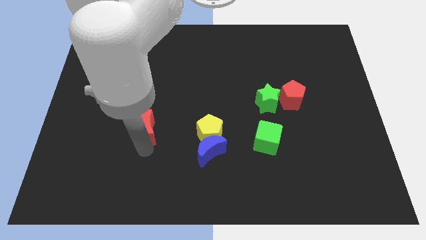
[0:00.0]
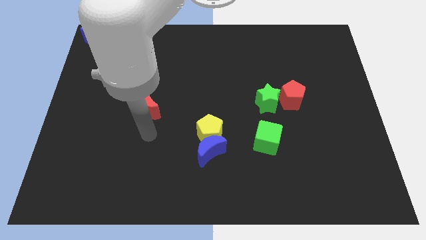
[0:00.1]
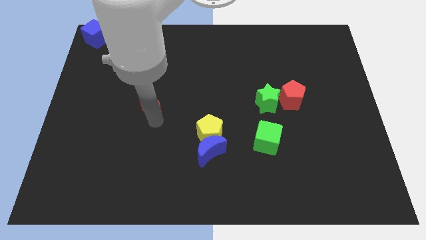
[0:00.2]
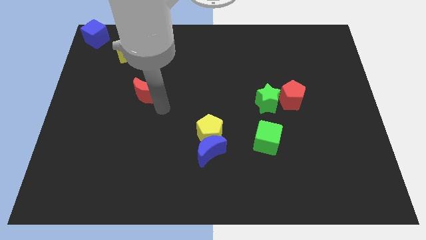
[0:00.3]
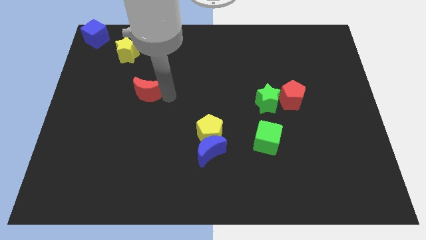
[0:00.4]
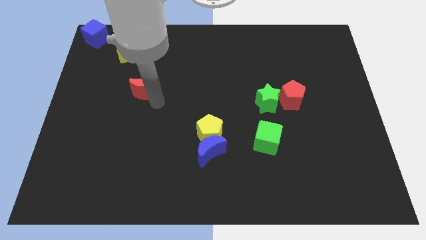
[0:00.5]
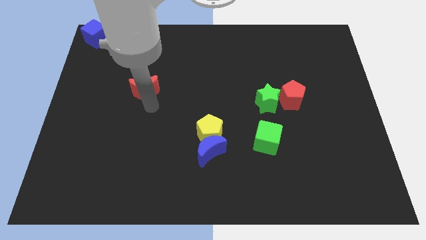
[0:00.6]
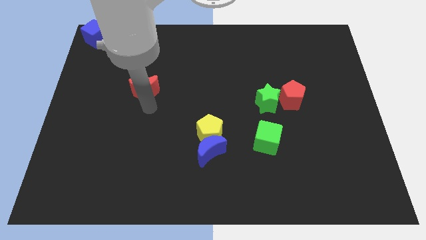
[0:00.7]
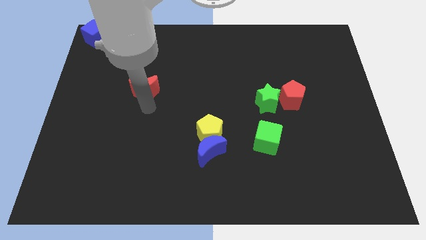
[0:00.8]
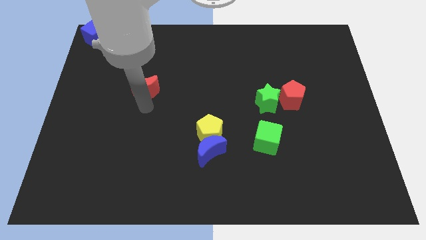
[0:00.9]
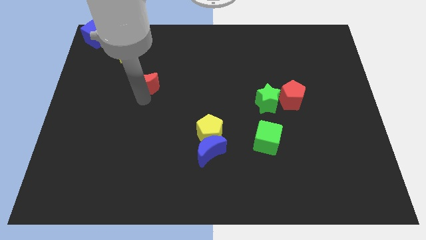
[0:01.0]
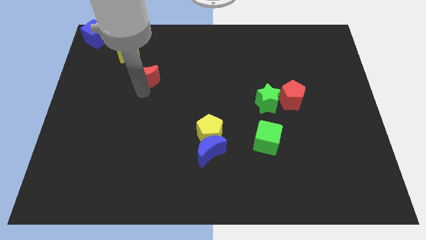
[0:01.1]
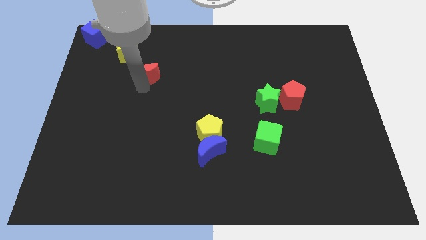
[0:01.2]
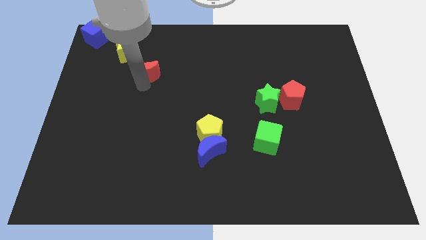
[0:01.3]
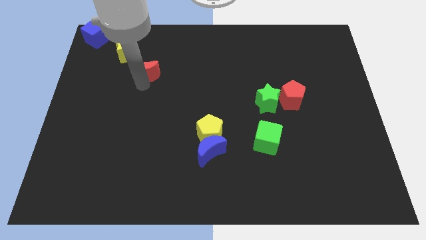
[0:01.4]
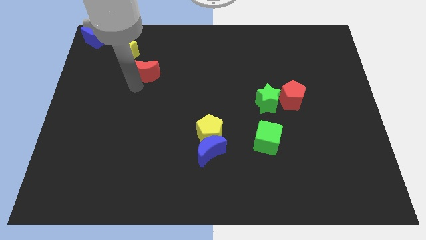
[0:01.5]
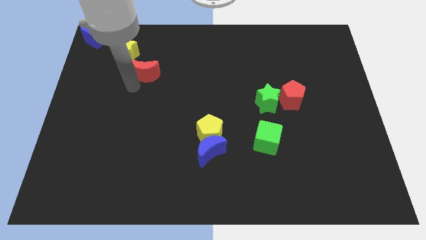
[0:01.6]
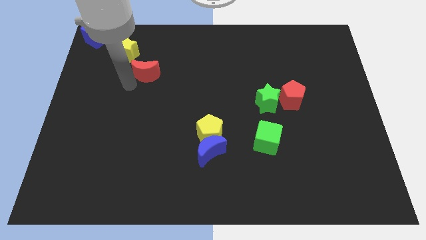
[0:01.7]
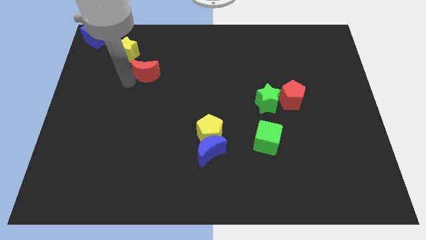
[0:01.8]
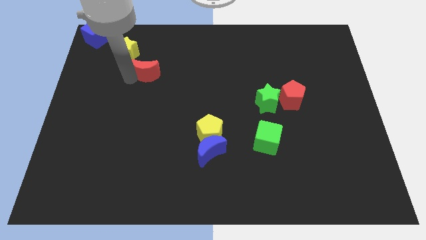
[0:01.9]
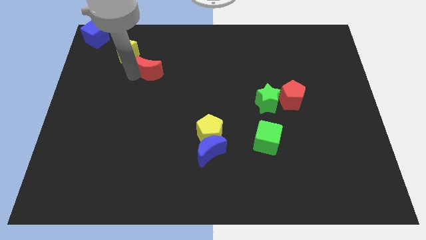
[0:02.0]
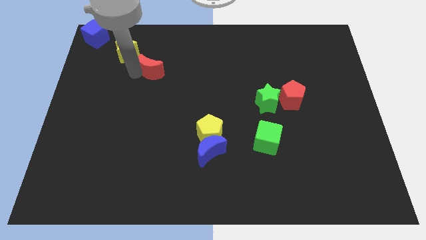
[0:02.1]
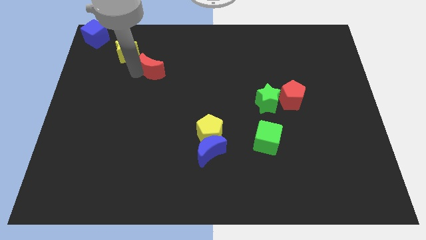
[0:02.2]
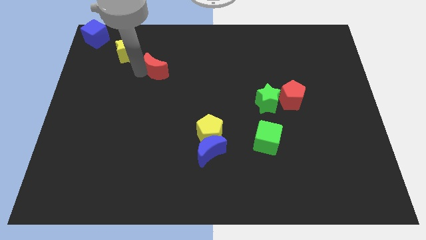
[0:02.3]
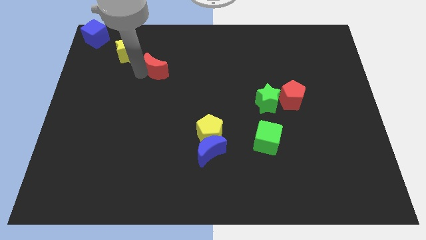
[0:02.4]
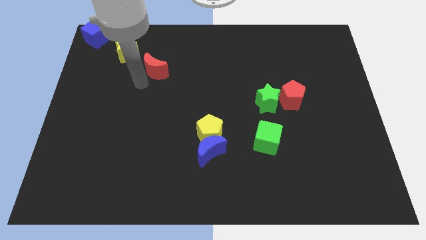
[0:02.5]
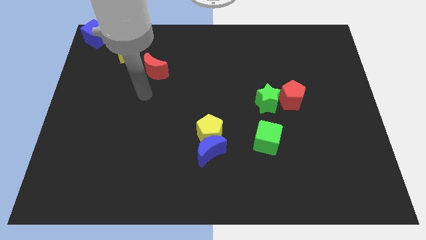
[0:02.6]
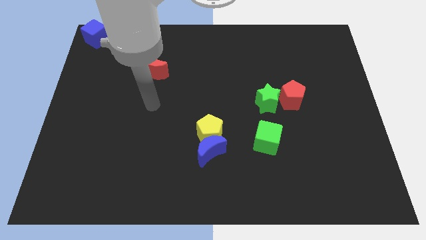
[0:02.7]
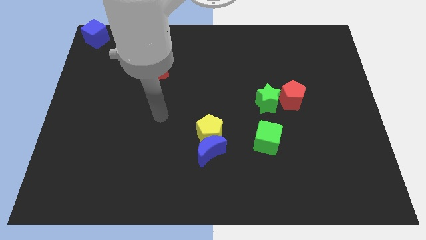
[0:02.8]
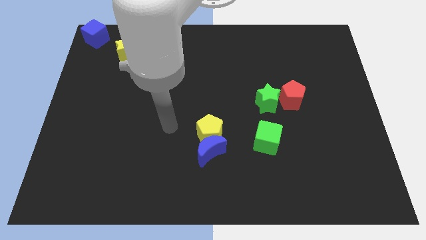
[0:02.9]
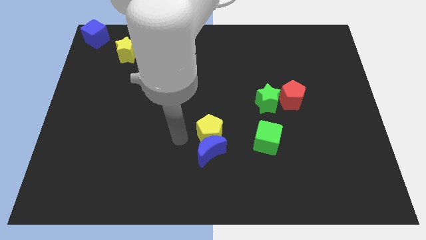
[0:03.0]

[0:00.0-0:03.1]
move red crescent towards the bottom of yellow star

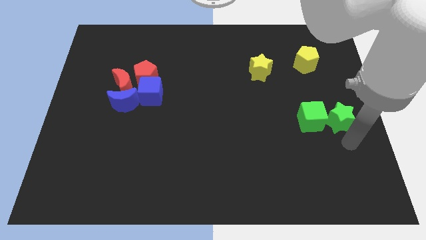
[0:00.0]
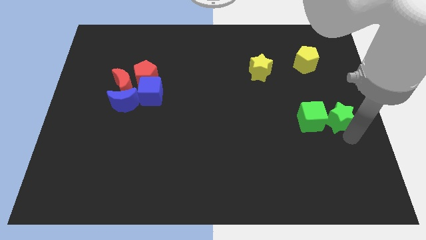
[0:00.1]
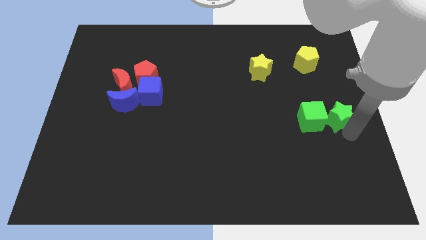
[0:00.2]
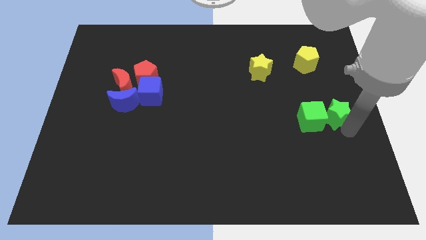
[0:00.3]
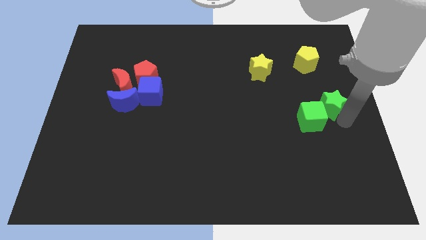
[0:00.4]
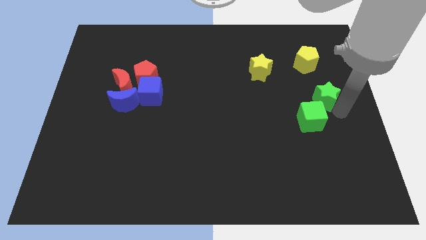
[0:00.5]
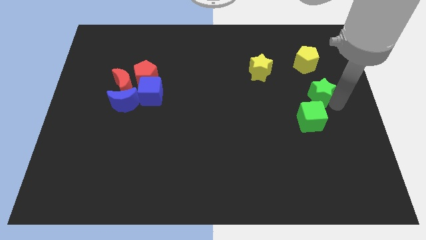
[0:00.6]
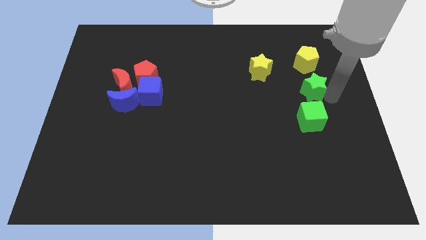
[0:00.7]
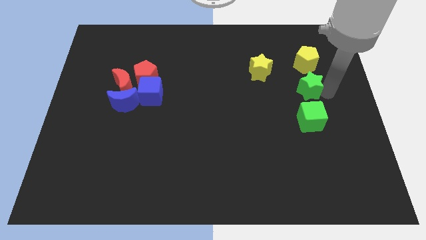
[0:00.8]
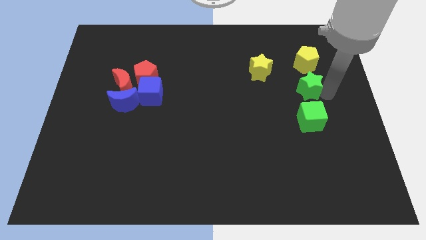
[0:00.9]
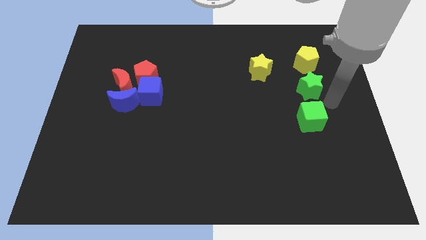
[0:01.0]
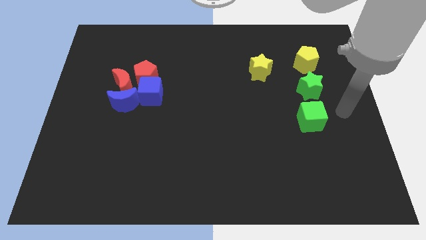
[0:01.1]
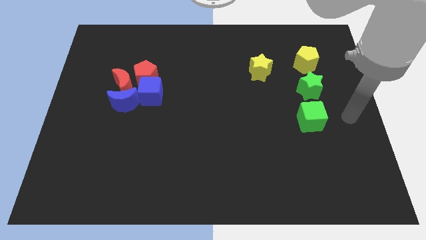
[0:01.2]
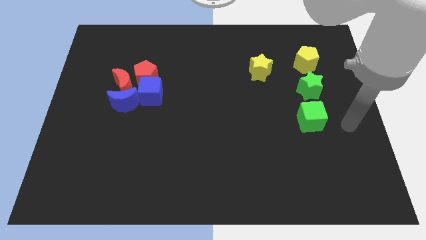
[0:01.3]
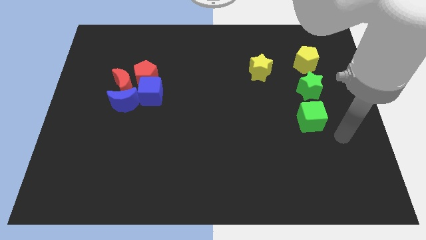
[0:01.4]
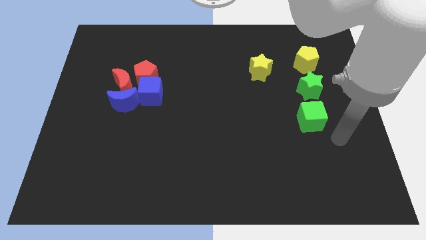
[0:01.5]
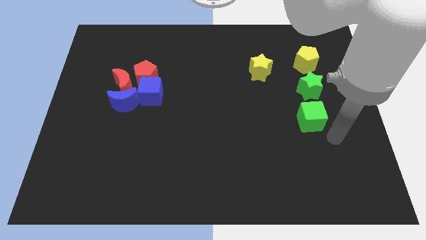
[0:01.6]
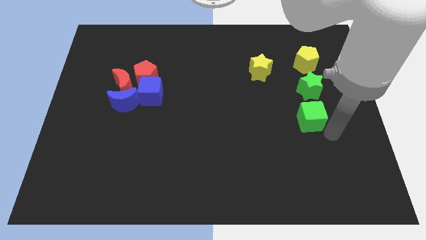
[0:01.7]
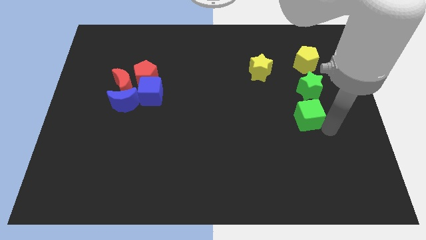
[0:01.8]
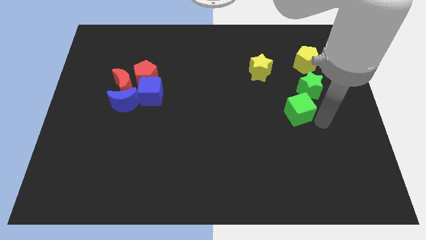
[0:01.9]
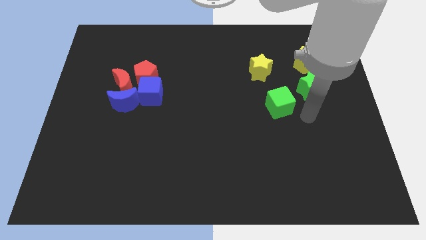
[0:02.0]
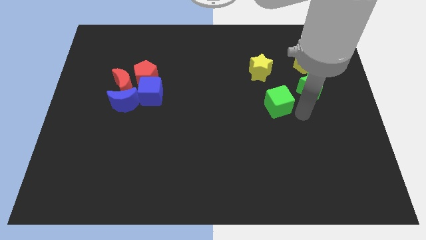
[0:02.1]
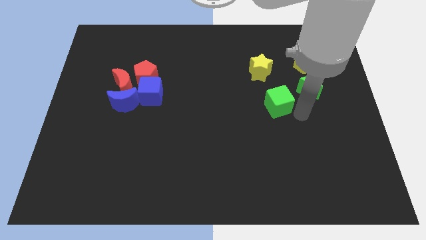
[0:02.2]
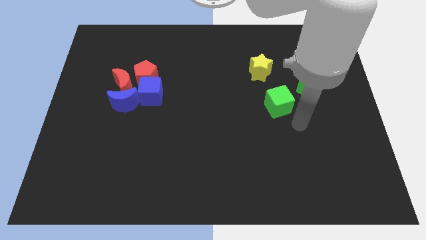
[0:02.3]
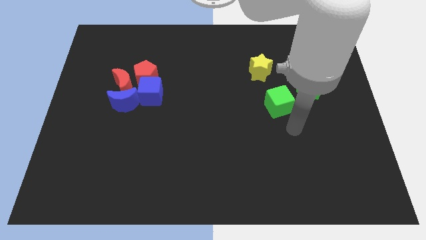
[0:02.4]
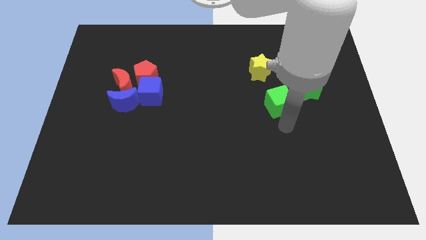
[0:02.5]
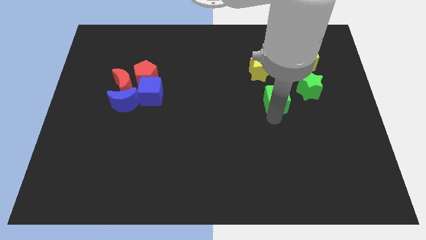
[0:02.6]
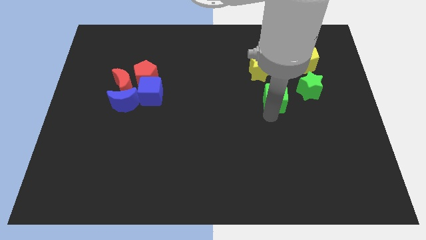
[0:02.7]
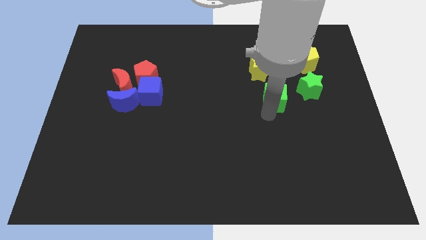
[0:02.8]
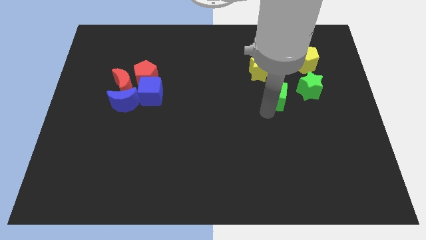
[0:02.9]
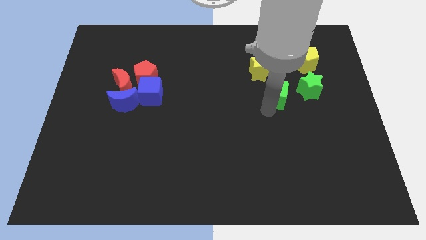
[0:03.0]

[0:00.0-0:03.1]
push green blocks up below yellow blocks

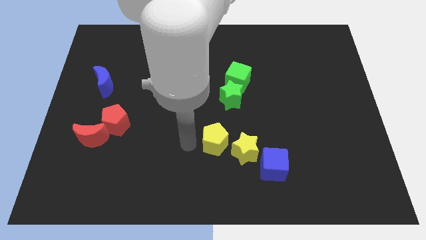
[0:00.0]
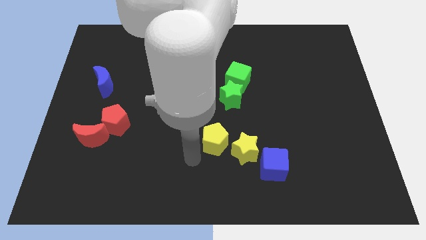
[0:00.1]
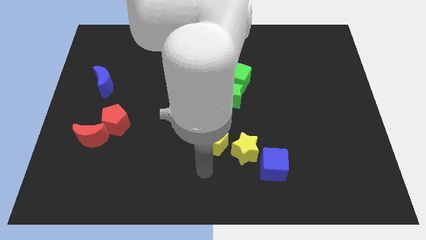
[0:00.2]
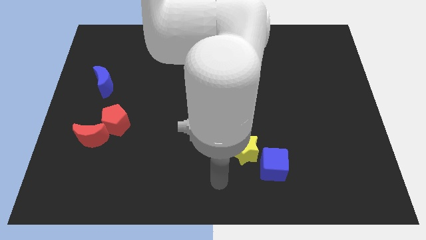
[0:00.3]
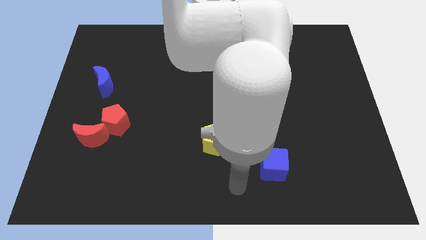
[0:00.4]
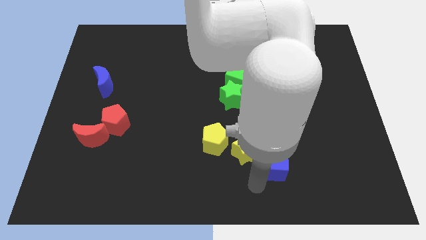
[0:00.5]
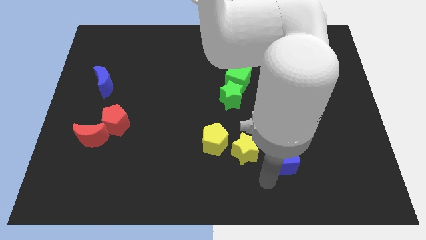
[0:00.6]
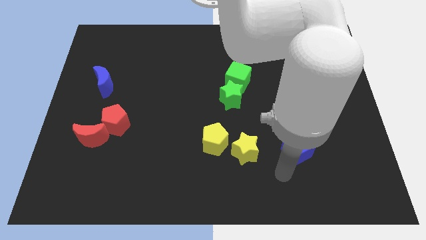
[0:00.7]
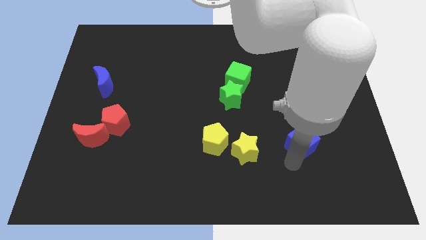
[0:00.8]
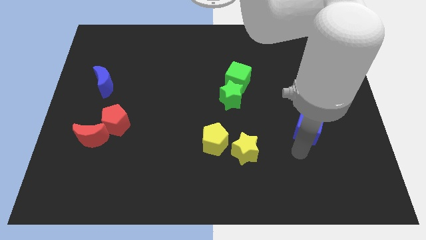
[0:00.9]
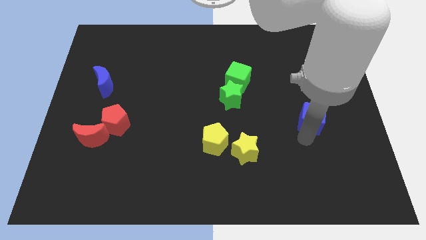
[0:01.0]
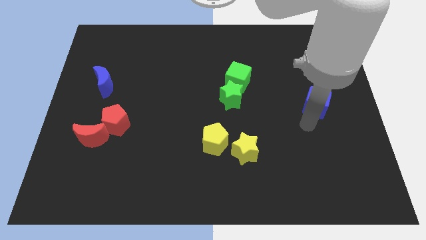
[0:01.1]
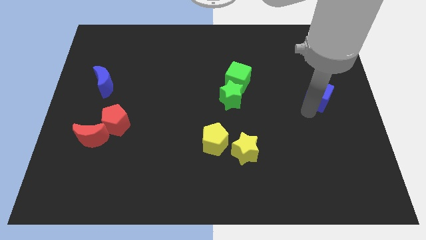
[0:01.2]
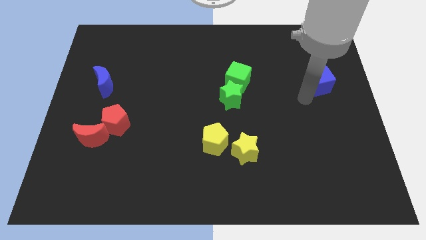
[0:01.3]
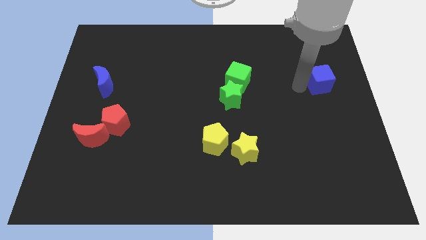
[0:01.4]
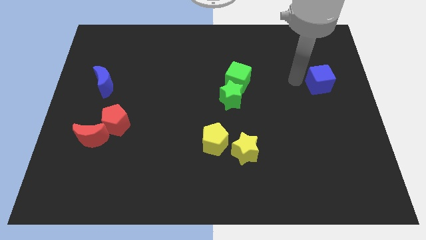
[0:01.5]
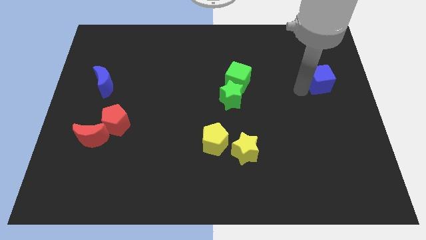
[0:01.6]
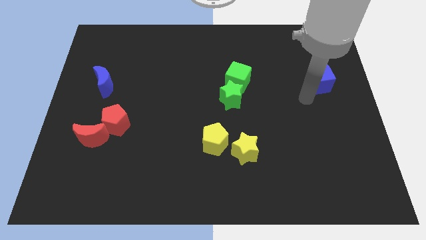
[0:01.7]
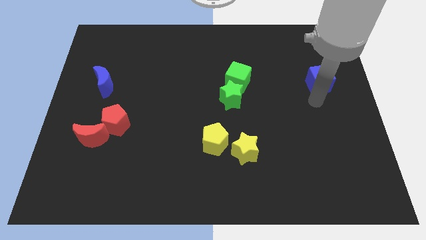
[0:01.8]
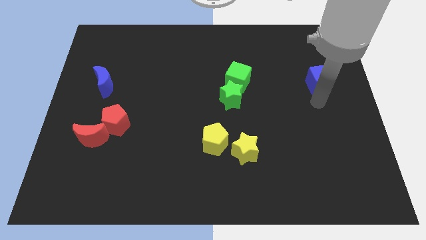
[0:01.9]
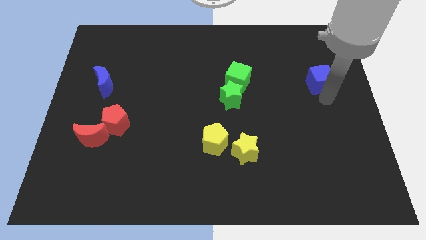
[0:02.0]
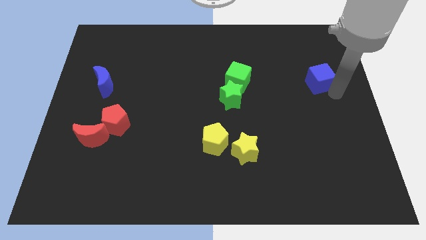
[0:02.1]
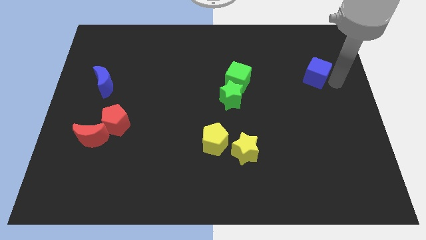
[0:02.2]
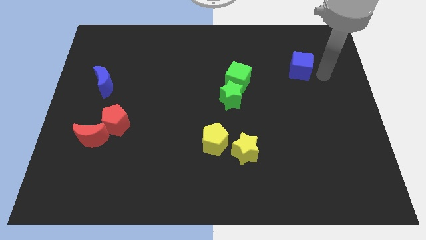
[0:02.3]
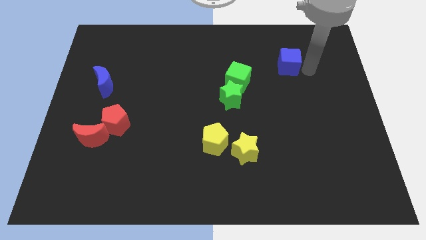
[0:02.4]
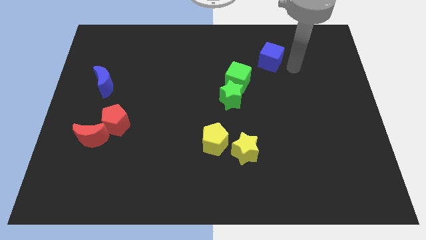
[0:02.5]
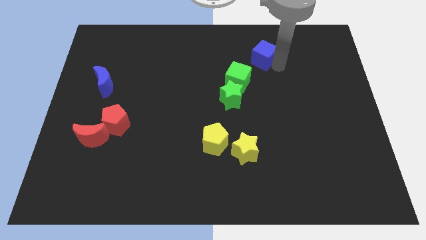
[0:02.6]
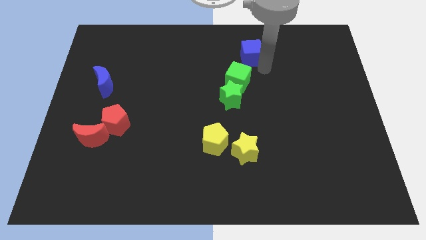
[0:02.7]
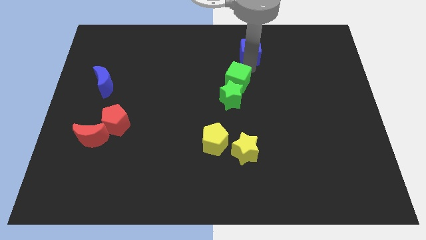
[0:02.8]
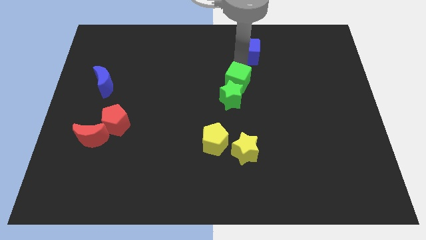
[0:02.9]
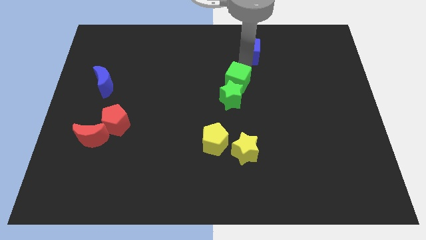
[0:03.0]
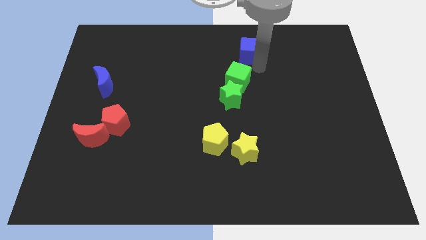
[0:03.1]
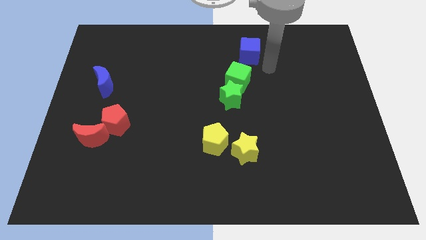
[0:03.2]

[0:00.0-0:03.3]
slide the blue cube towards the top center
